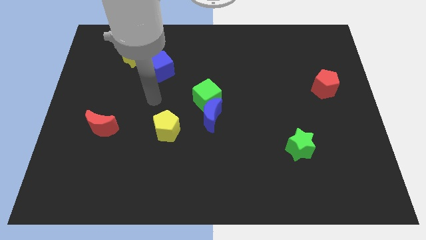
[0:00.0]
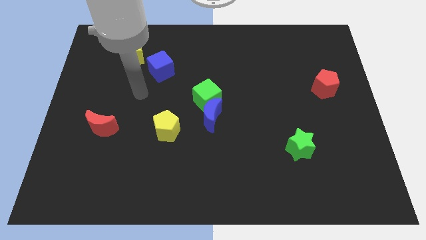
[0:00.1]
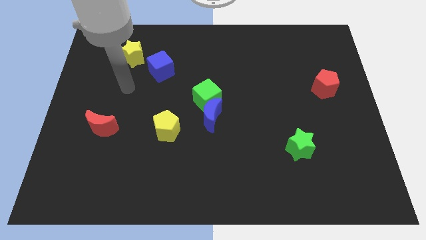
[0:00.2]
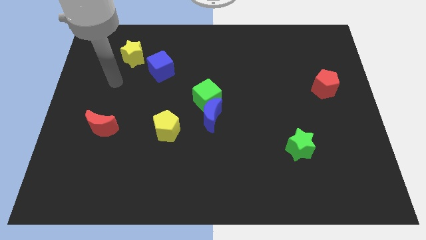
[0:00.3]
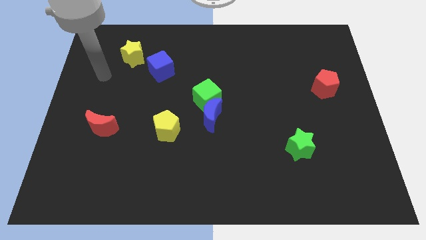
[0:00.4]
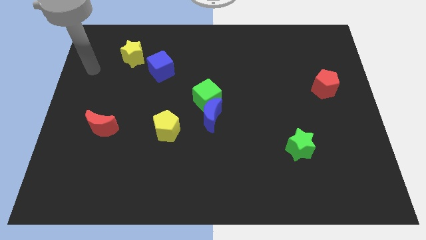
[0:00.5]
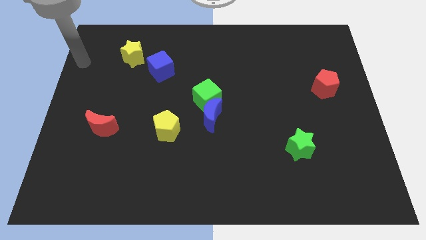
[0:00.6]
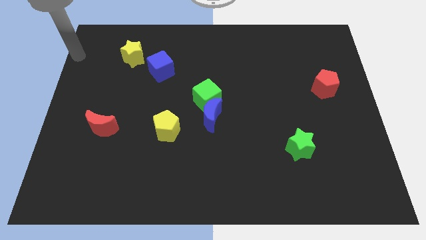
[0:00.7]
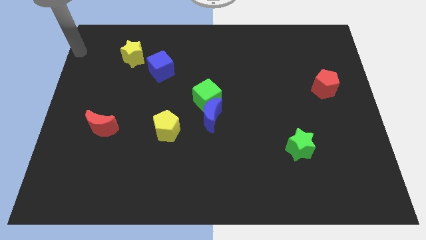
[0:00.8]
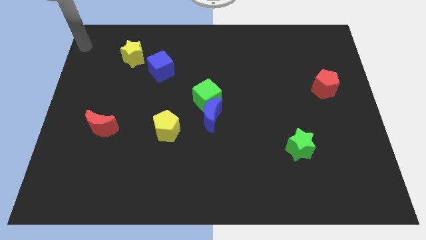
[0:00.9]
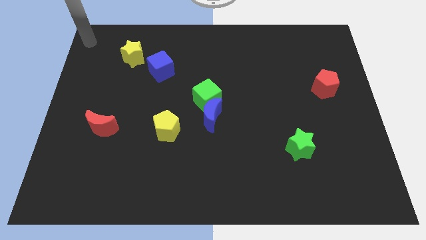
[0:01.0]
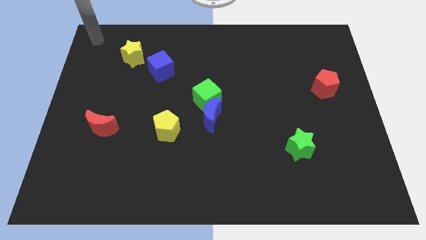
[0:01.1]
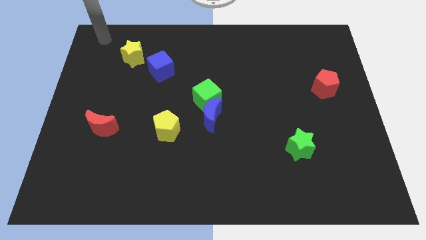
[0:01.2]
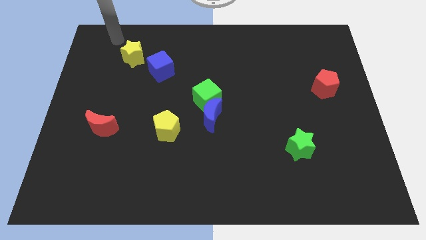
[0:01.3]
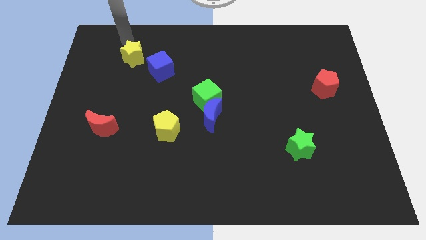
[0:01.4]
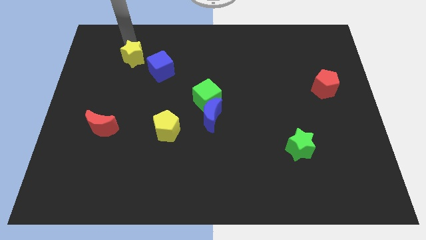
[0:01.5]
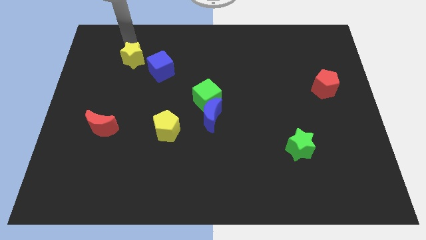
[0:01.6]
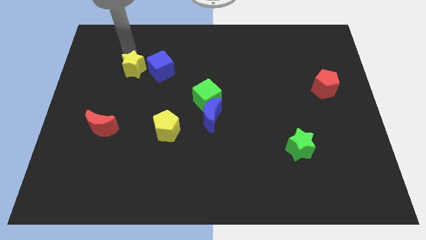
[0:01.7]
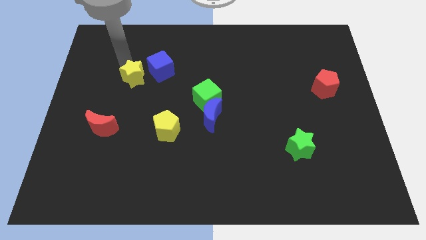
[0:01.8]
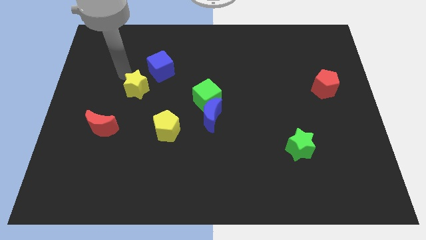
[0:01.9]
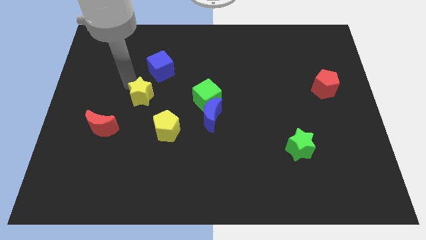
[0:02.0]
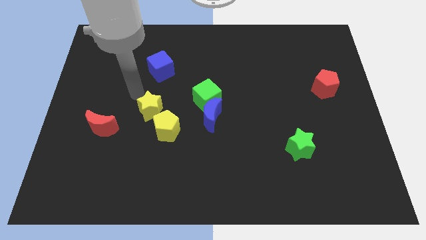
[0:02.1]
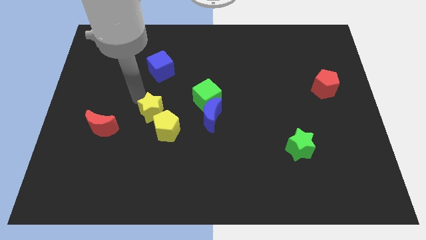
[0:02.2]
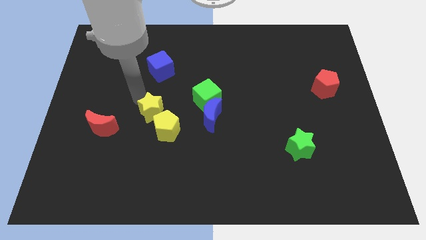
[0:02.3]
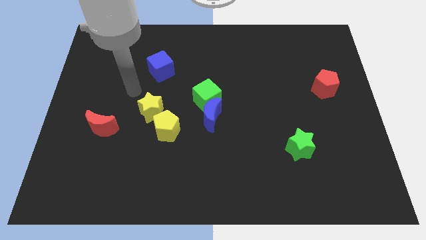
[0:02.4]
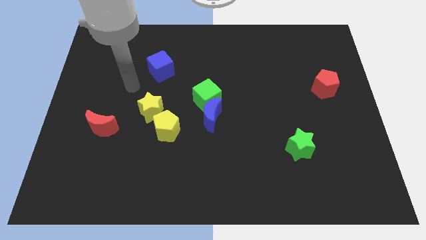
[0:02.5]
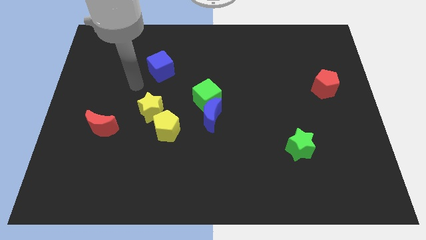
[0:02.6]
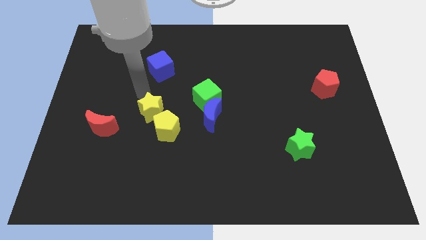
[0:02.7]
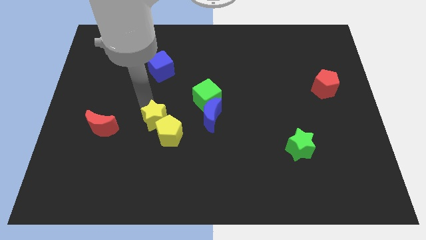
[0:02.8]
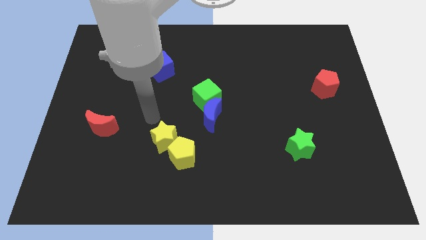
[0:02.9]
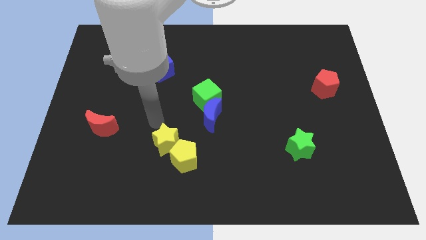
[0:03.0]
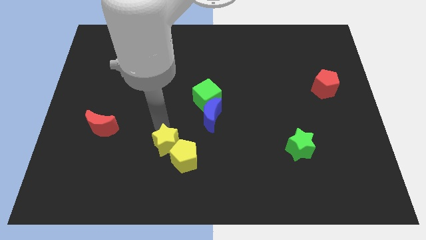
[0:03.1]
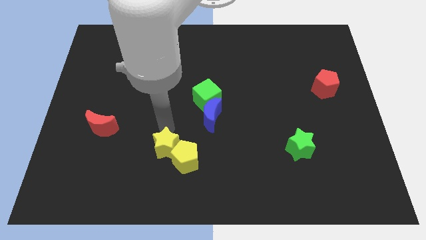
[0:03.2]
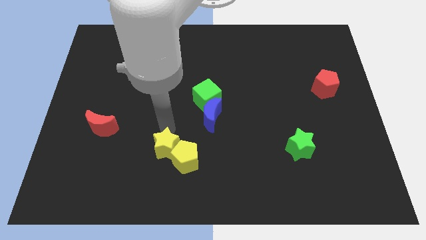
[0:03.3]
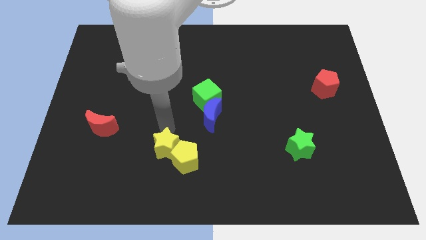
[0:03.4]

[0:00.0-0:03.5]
move yellow star into yellow pentagon

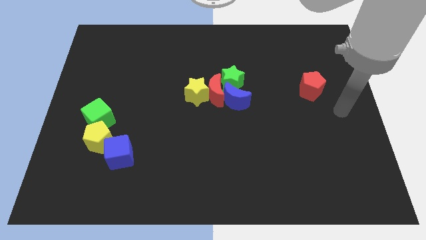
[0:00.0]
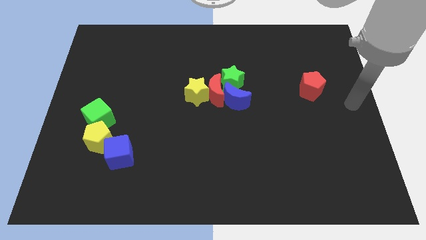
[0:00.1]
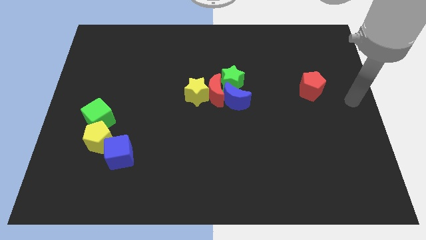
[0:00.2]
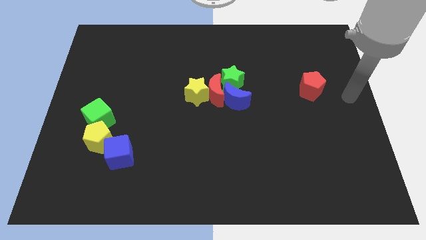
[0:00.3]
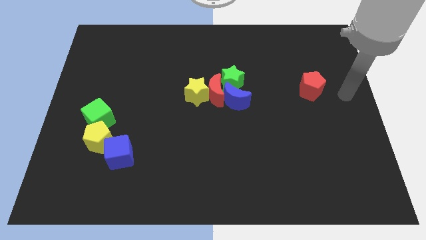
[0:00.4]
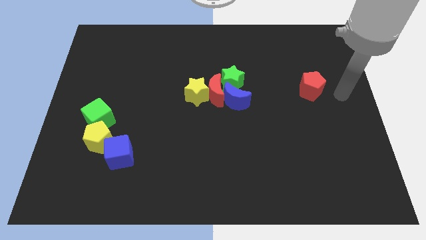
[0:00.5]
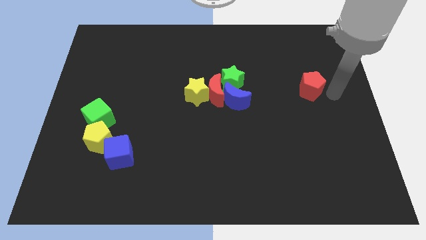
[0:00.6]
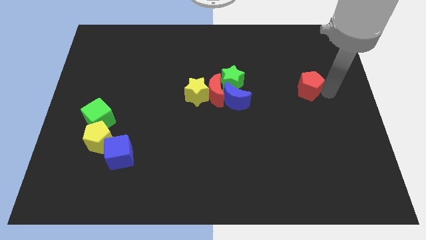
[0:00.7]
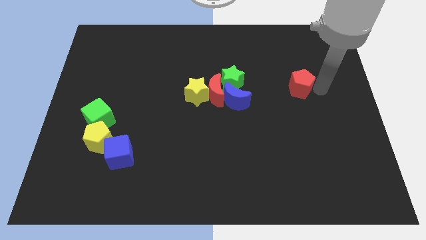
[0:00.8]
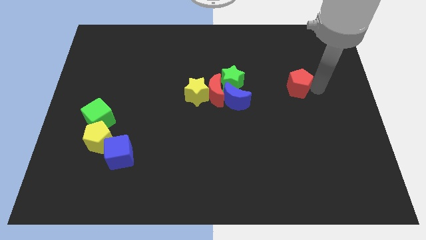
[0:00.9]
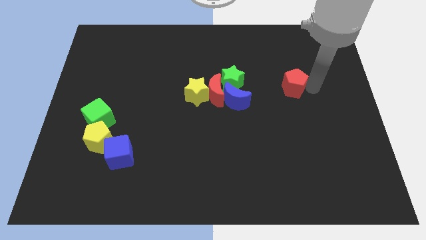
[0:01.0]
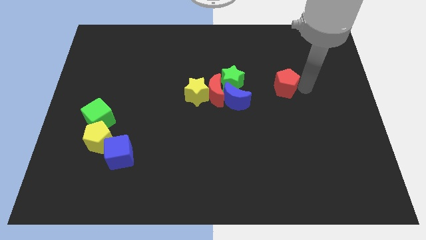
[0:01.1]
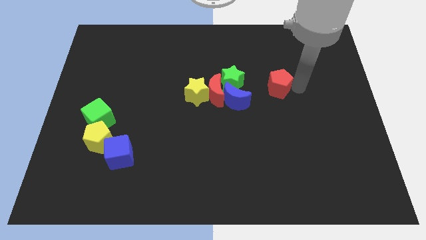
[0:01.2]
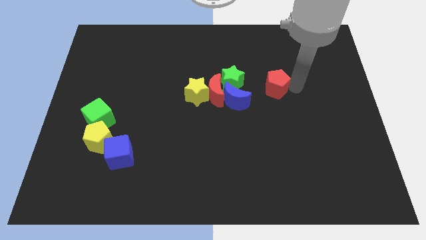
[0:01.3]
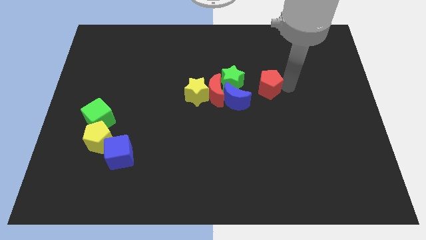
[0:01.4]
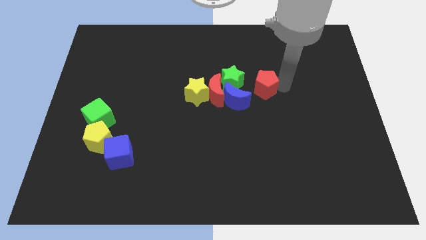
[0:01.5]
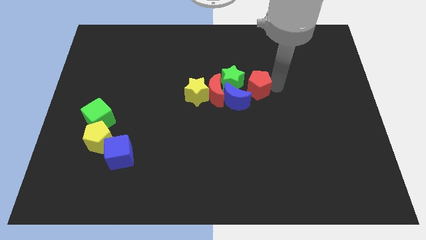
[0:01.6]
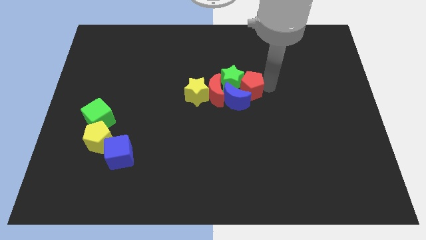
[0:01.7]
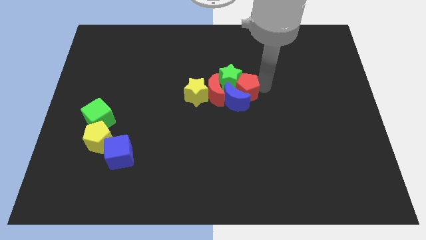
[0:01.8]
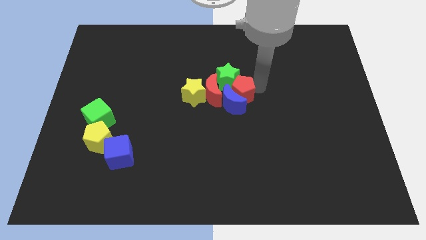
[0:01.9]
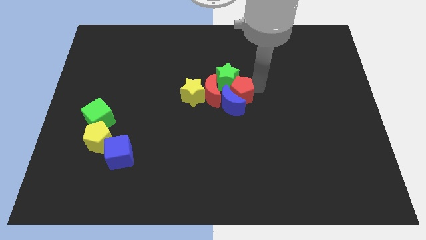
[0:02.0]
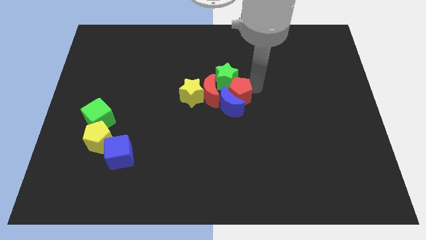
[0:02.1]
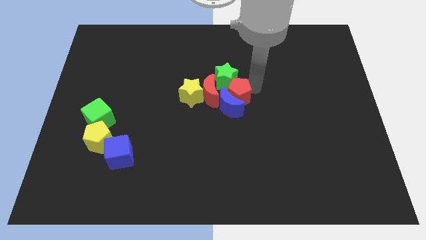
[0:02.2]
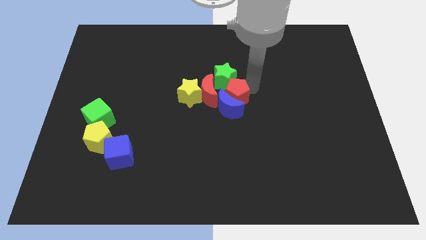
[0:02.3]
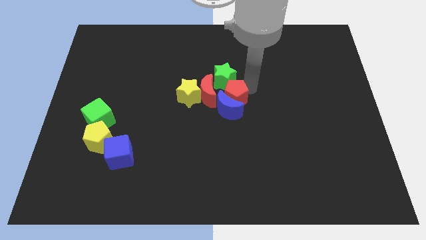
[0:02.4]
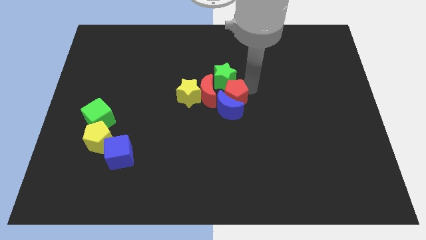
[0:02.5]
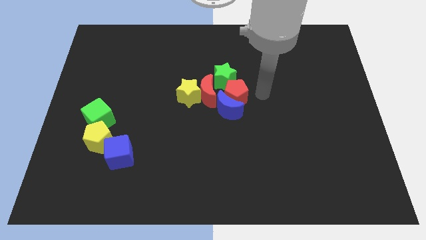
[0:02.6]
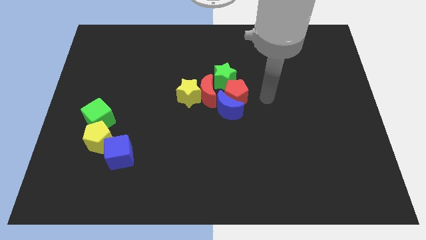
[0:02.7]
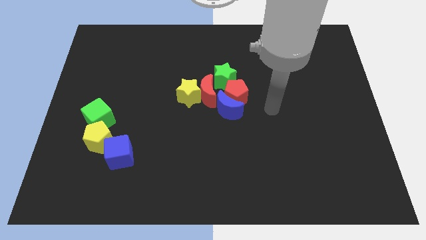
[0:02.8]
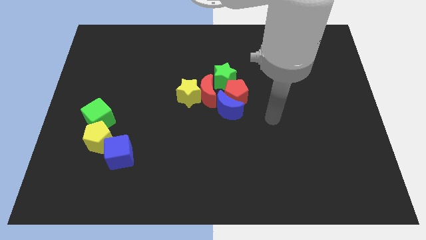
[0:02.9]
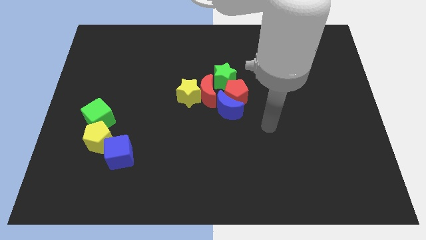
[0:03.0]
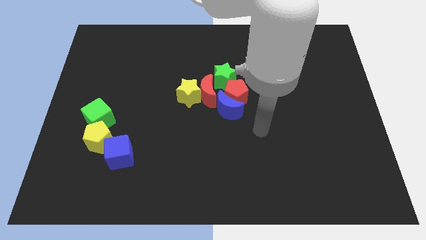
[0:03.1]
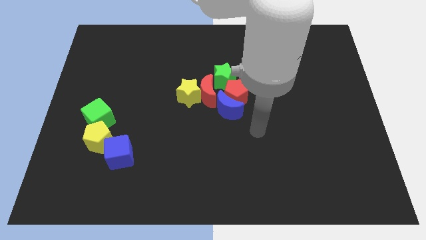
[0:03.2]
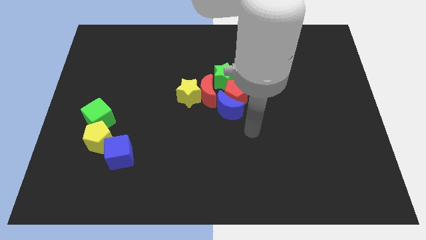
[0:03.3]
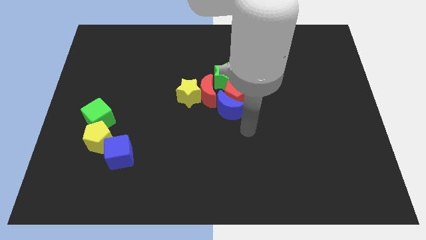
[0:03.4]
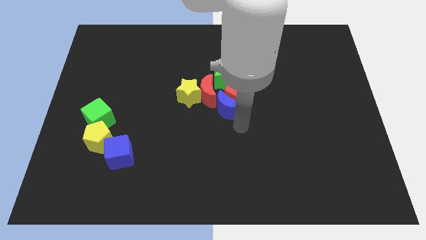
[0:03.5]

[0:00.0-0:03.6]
push the red pentagon into the blue crescent

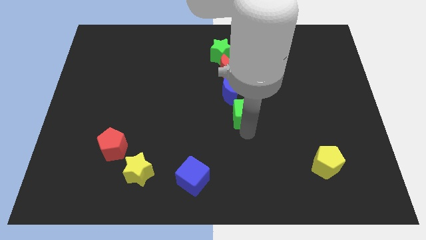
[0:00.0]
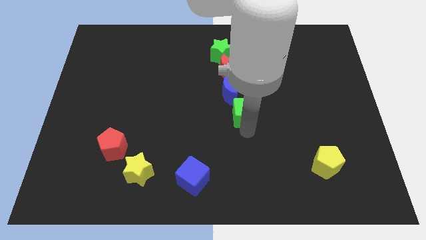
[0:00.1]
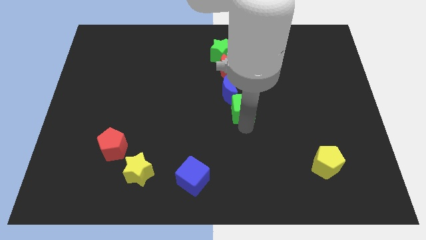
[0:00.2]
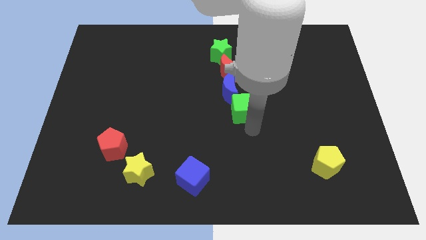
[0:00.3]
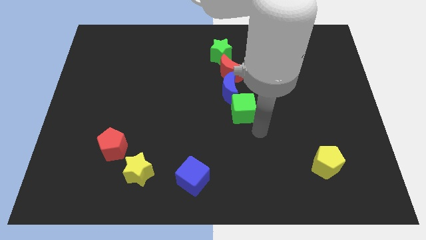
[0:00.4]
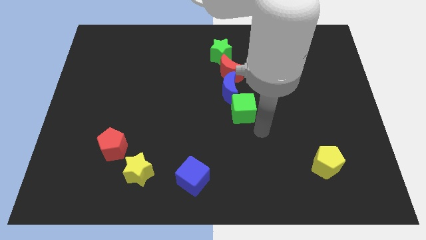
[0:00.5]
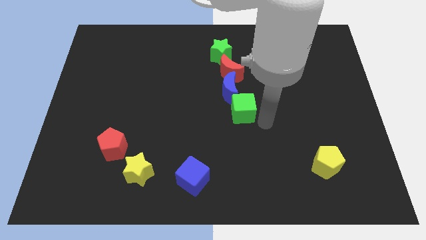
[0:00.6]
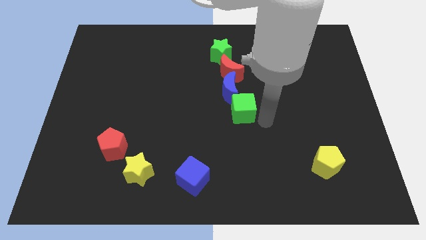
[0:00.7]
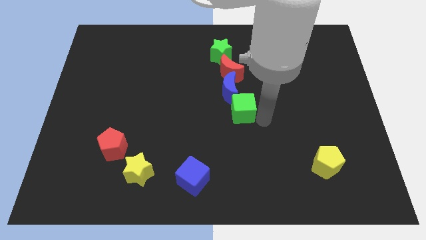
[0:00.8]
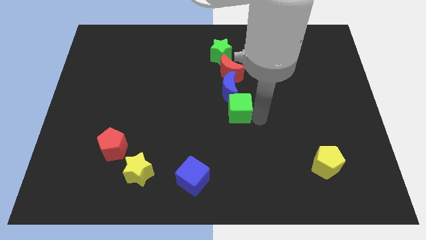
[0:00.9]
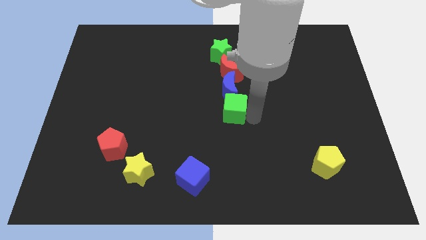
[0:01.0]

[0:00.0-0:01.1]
slide green cube below blue moon

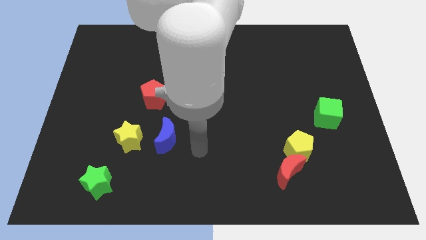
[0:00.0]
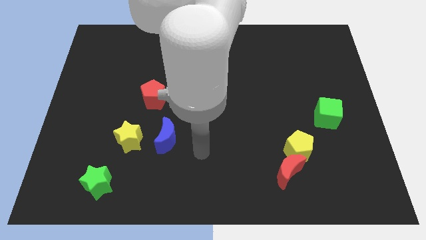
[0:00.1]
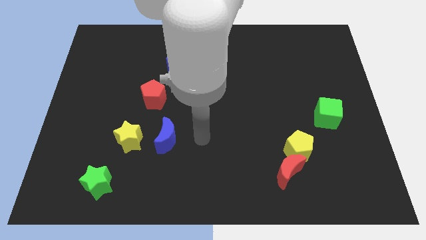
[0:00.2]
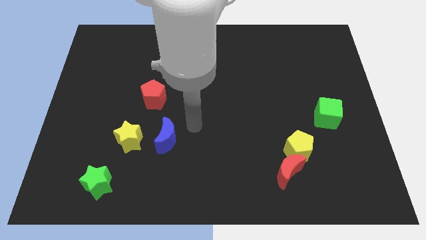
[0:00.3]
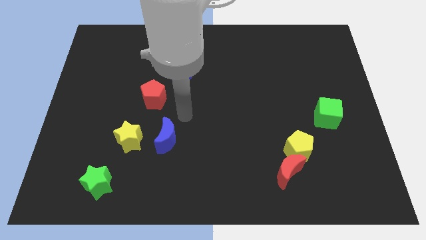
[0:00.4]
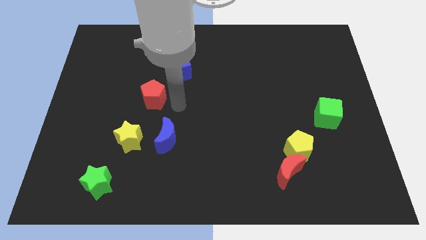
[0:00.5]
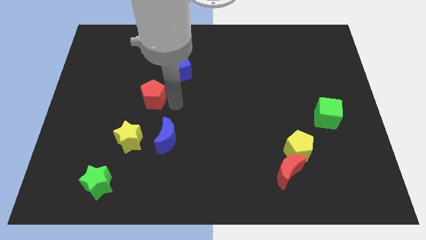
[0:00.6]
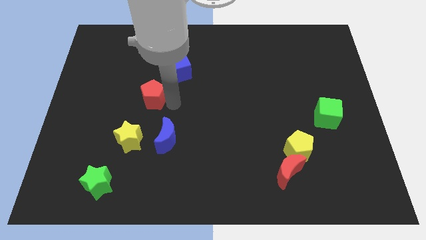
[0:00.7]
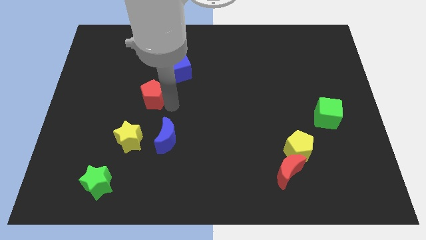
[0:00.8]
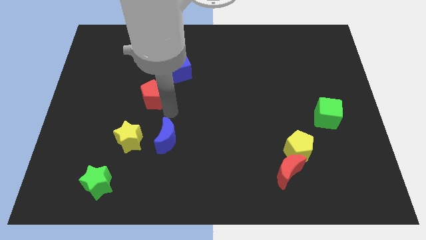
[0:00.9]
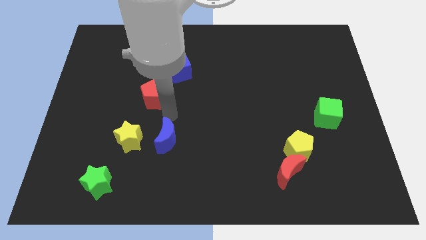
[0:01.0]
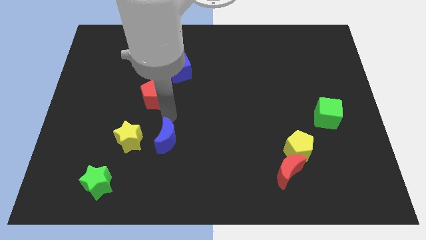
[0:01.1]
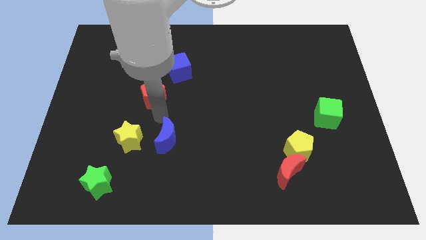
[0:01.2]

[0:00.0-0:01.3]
point your arm at the top of the blue crescent
